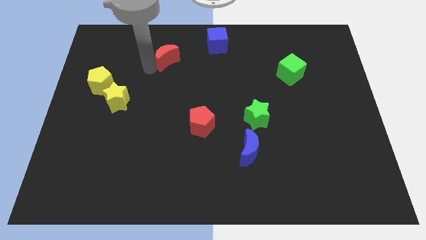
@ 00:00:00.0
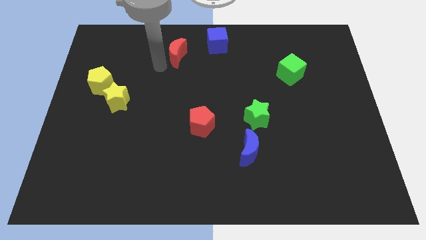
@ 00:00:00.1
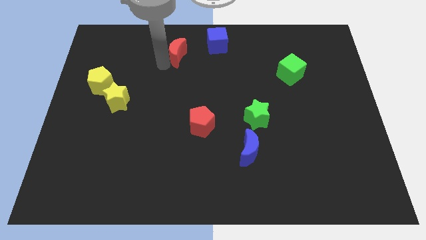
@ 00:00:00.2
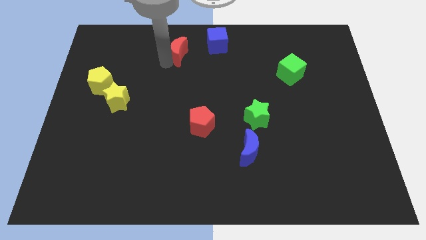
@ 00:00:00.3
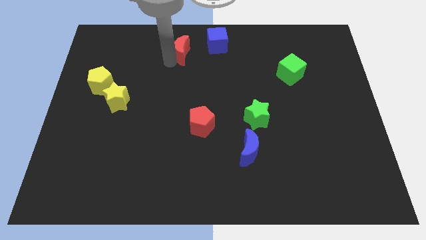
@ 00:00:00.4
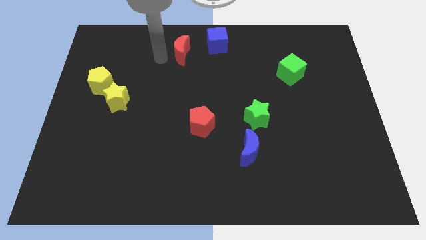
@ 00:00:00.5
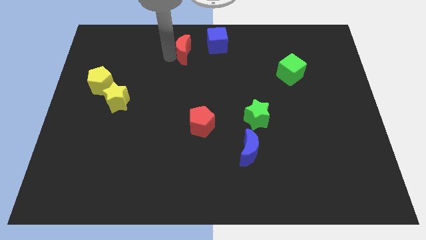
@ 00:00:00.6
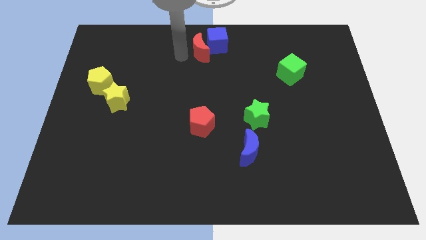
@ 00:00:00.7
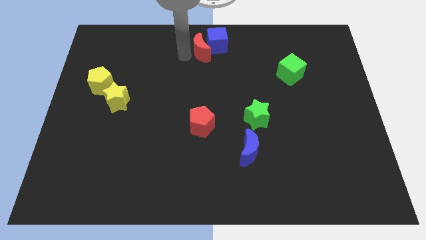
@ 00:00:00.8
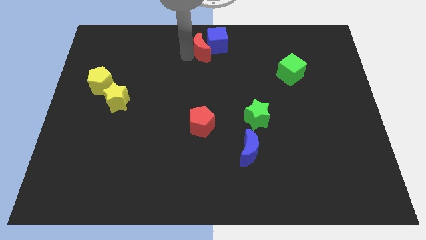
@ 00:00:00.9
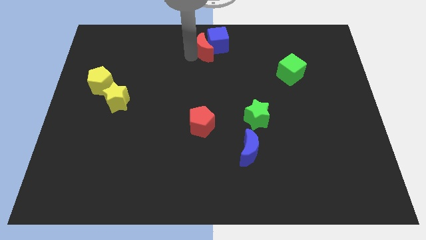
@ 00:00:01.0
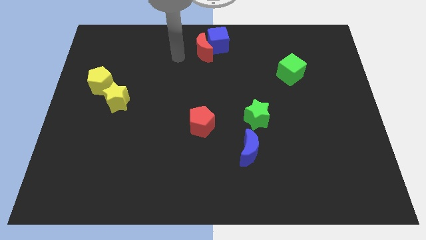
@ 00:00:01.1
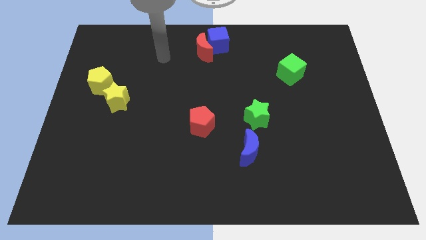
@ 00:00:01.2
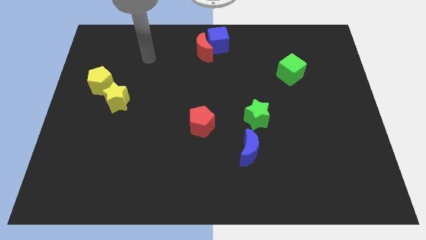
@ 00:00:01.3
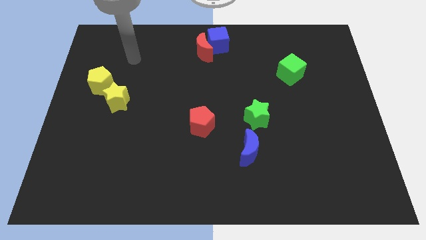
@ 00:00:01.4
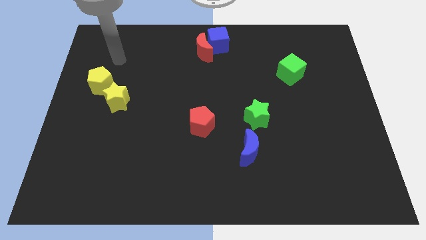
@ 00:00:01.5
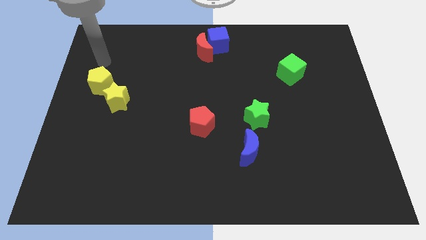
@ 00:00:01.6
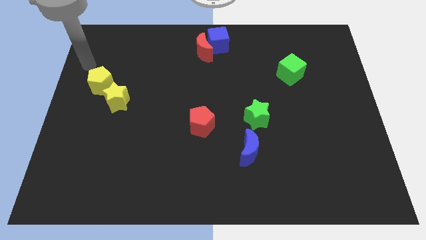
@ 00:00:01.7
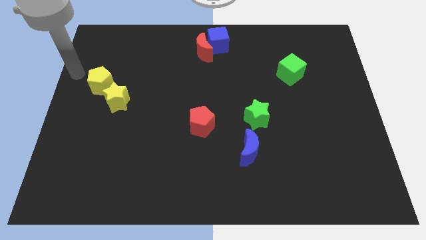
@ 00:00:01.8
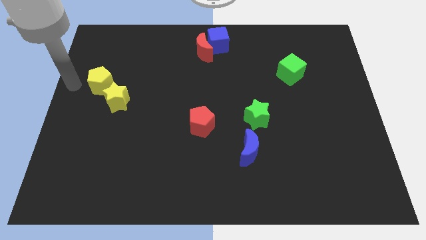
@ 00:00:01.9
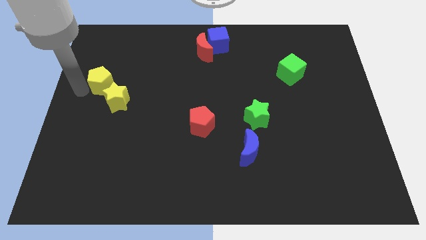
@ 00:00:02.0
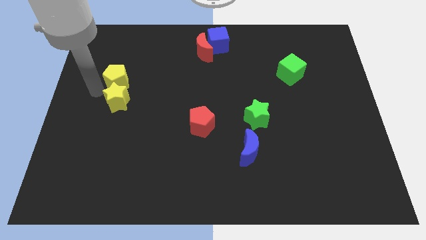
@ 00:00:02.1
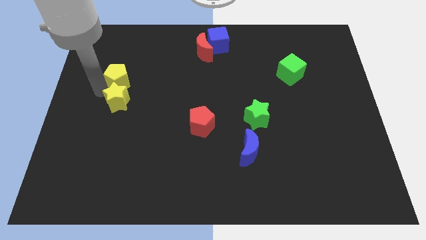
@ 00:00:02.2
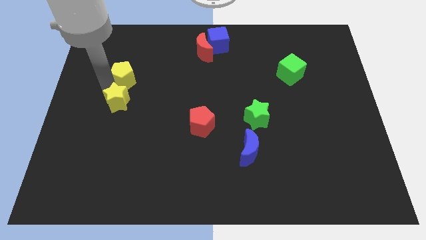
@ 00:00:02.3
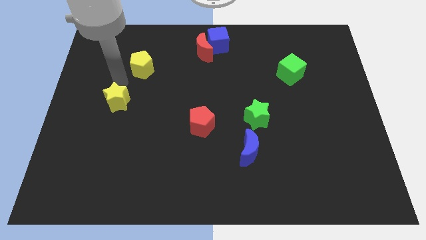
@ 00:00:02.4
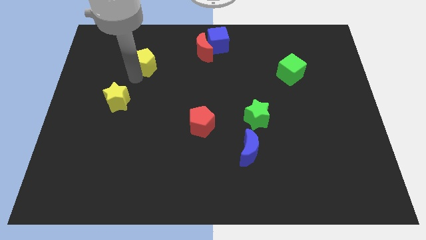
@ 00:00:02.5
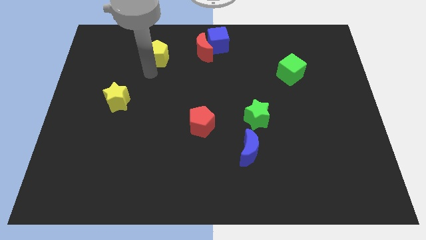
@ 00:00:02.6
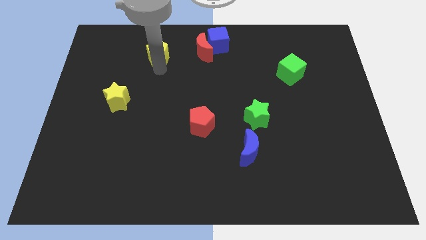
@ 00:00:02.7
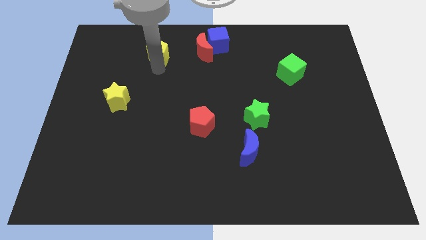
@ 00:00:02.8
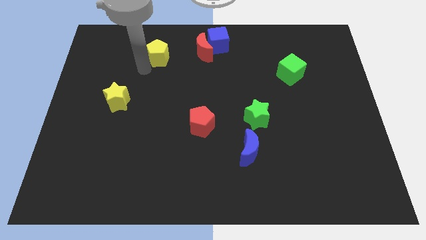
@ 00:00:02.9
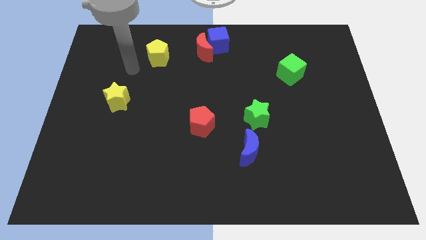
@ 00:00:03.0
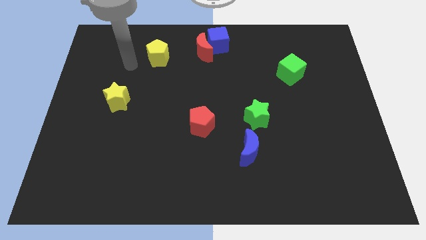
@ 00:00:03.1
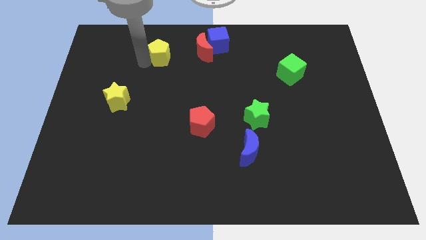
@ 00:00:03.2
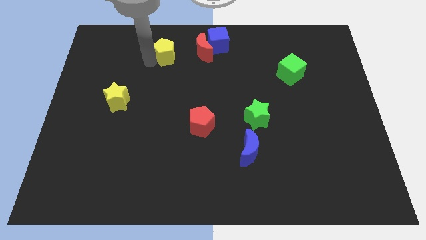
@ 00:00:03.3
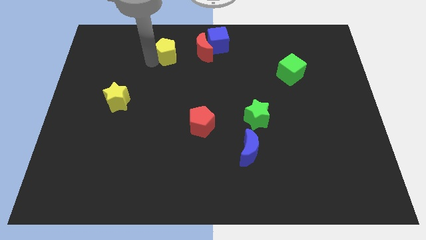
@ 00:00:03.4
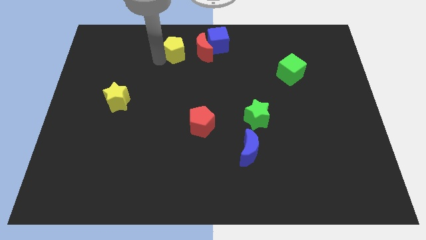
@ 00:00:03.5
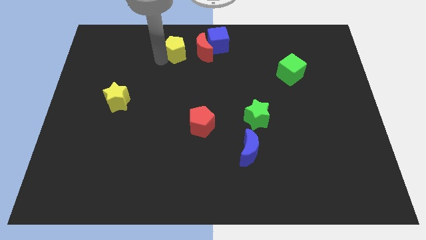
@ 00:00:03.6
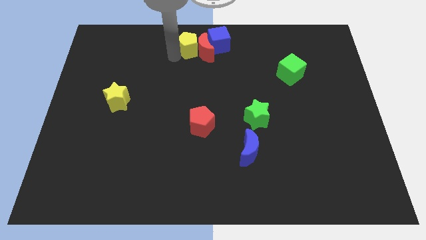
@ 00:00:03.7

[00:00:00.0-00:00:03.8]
place the red crescent towards the left side of the blue cube

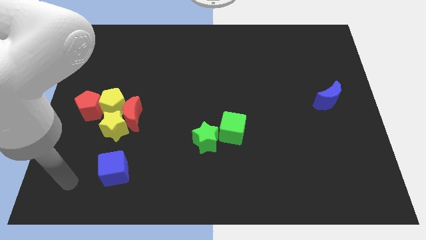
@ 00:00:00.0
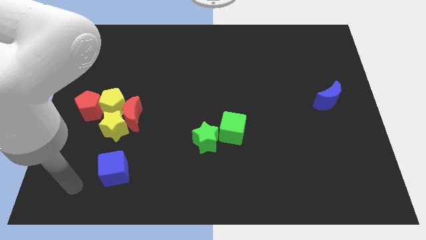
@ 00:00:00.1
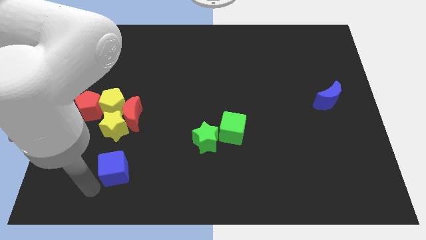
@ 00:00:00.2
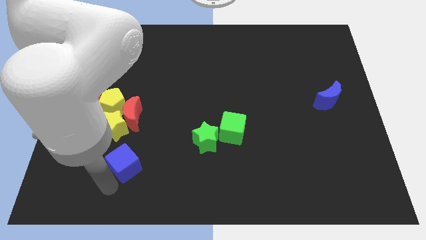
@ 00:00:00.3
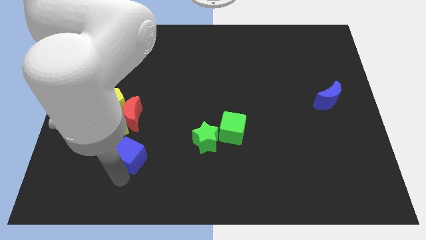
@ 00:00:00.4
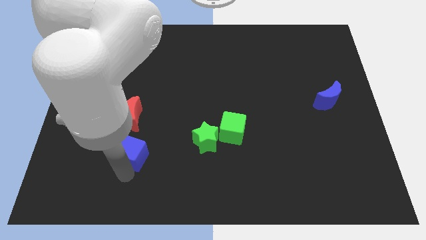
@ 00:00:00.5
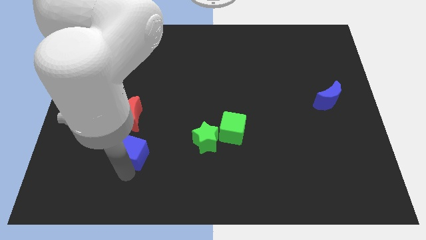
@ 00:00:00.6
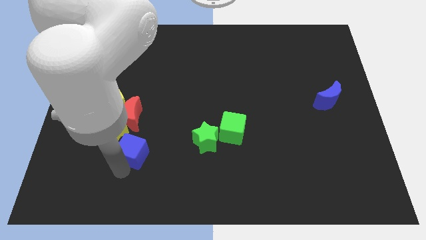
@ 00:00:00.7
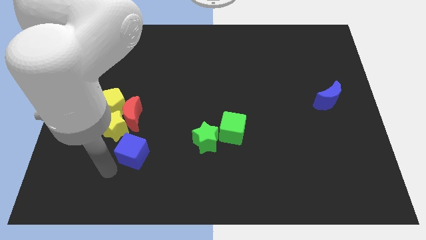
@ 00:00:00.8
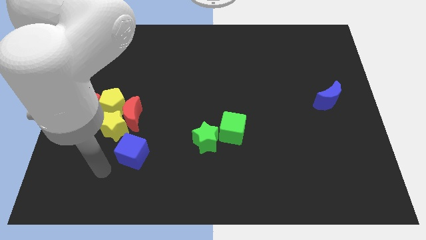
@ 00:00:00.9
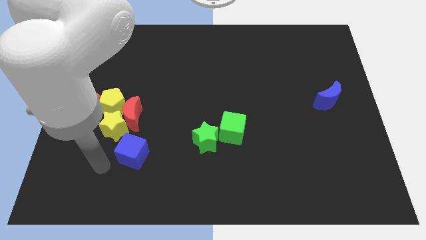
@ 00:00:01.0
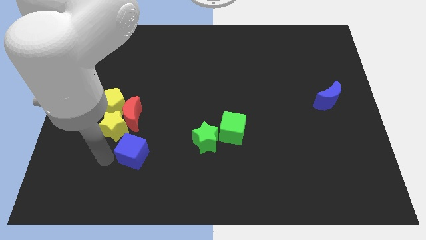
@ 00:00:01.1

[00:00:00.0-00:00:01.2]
move the blue cube below the red moon

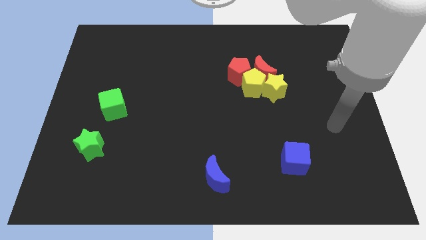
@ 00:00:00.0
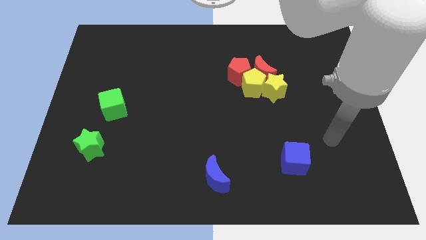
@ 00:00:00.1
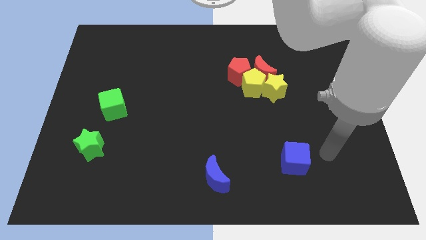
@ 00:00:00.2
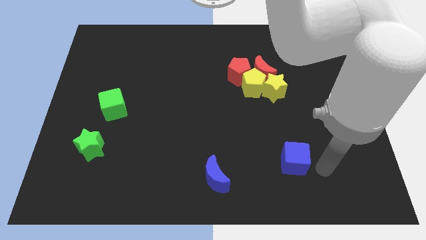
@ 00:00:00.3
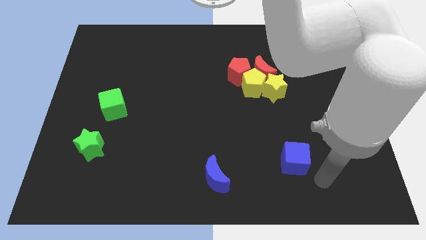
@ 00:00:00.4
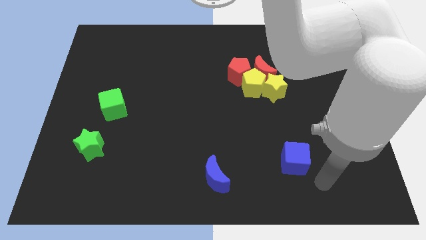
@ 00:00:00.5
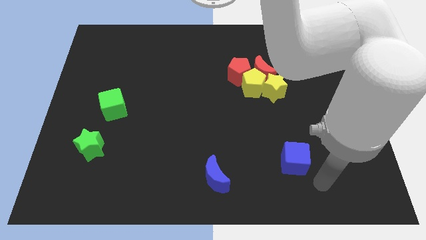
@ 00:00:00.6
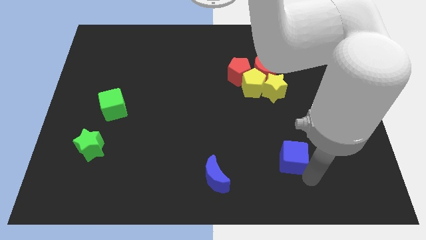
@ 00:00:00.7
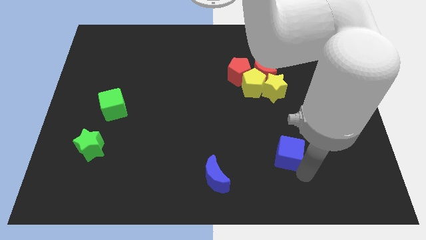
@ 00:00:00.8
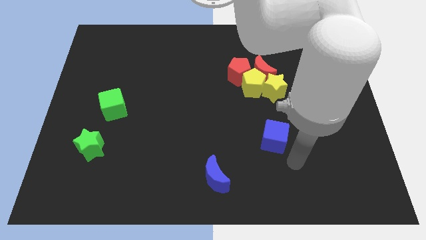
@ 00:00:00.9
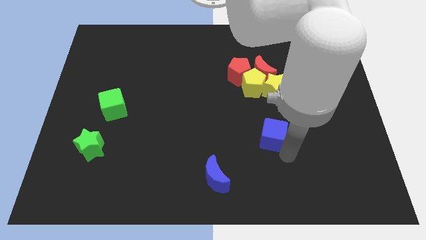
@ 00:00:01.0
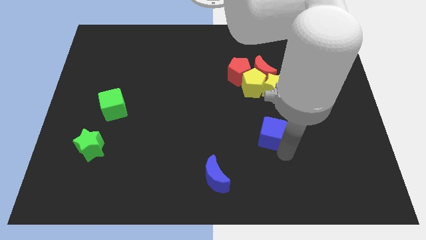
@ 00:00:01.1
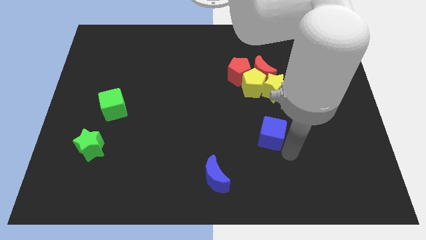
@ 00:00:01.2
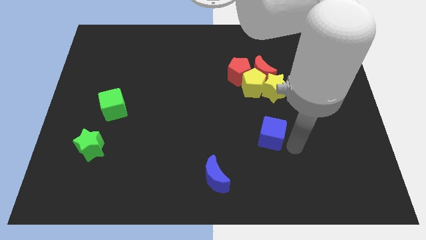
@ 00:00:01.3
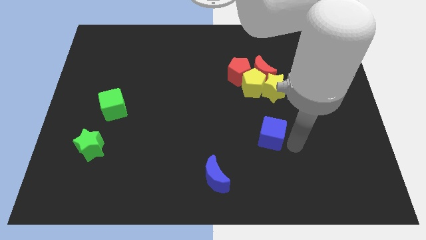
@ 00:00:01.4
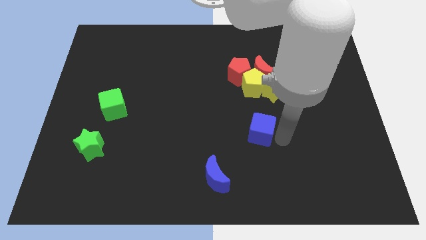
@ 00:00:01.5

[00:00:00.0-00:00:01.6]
move the blue cube towards up

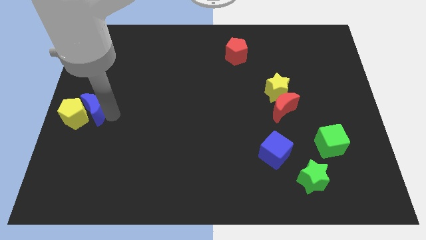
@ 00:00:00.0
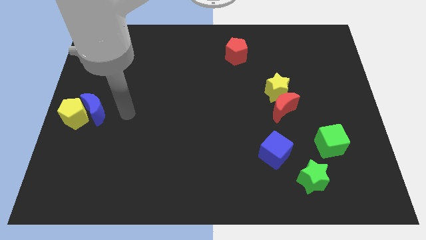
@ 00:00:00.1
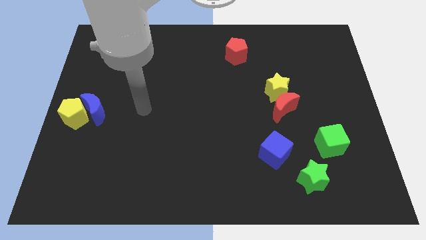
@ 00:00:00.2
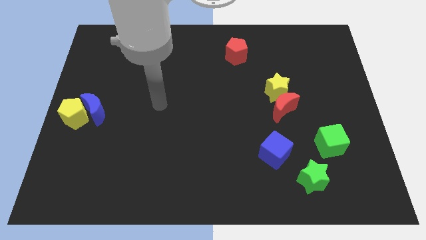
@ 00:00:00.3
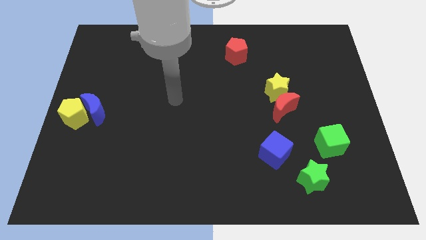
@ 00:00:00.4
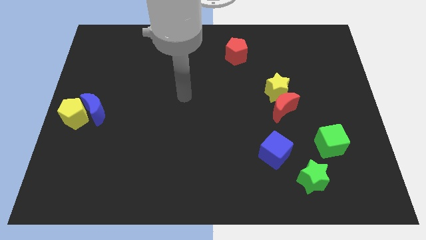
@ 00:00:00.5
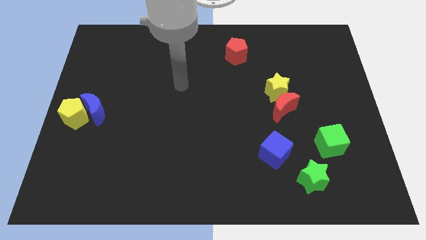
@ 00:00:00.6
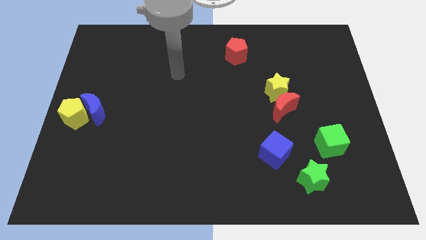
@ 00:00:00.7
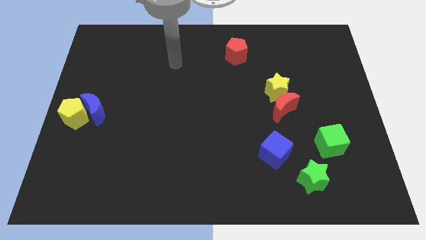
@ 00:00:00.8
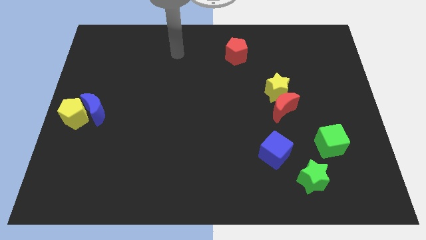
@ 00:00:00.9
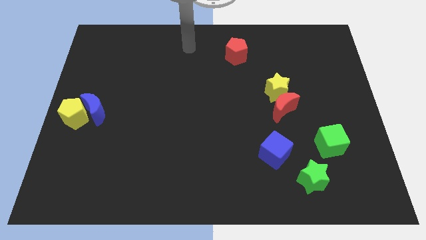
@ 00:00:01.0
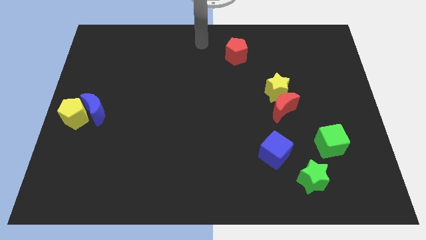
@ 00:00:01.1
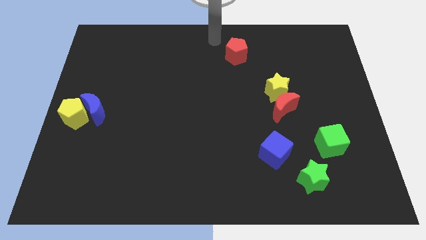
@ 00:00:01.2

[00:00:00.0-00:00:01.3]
point your arm at the top left side of the red pentagon

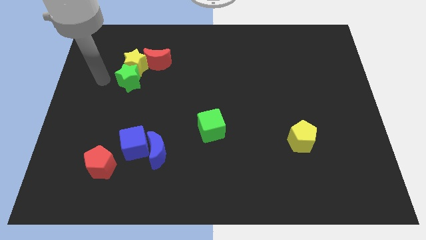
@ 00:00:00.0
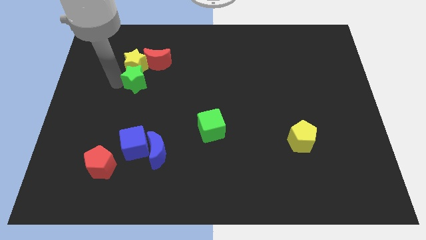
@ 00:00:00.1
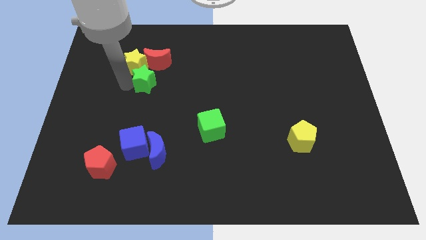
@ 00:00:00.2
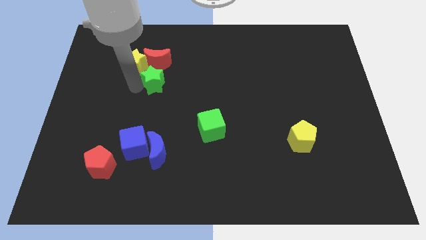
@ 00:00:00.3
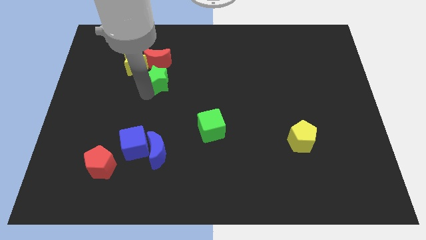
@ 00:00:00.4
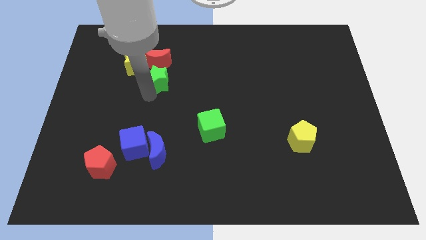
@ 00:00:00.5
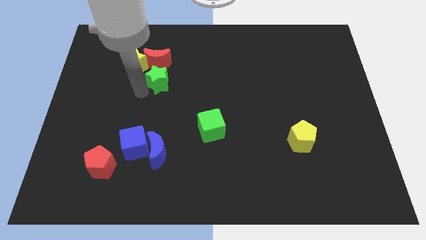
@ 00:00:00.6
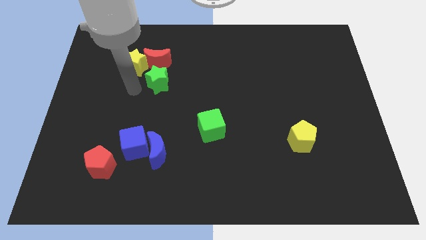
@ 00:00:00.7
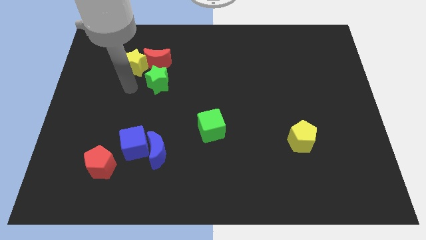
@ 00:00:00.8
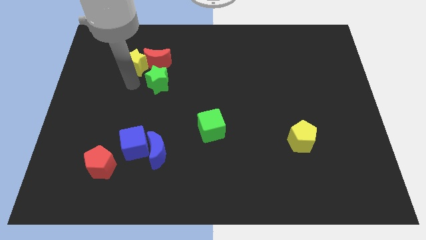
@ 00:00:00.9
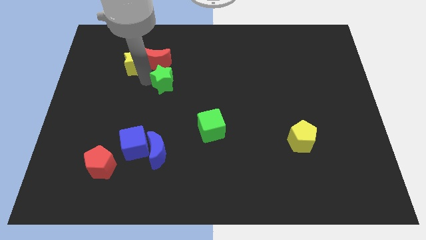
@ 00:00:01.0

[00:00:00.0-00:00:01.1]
move the green star slightly to the right
